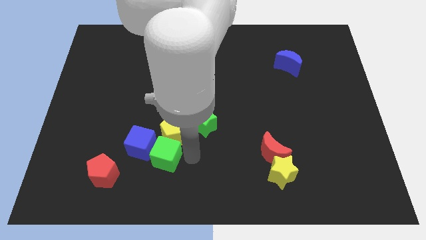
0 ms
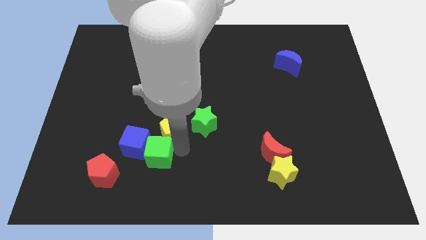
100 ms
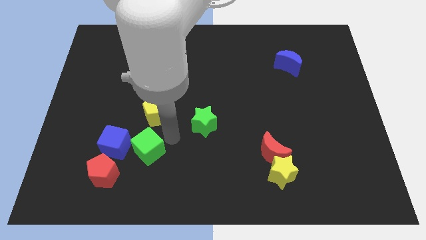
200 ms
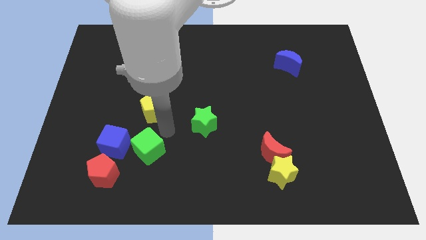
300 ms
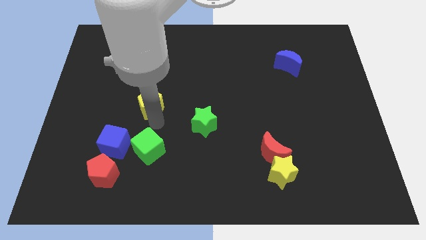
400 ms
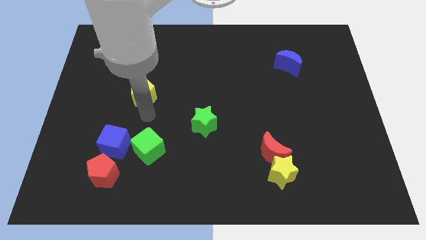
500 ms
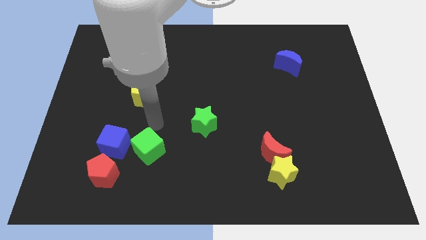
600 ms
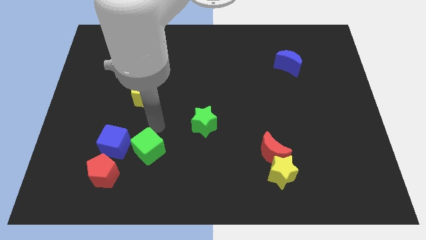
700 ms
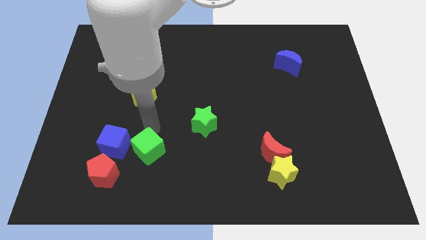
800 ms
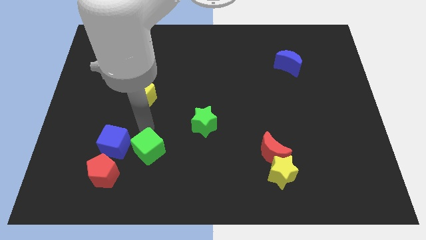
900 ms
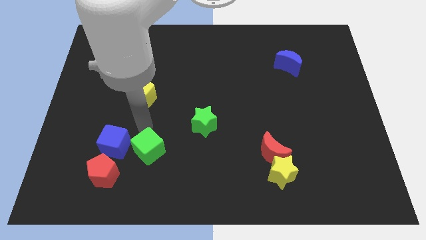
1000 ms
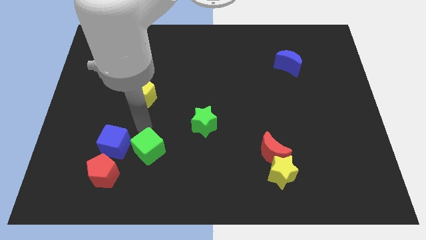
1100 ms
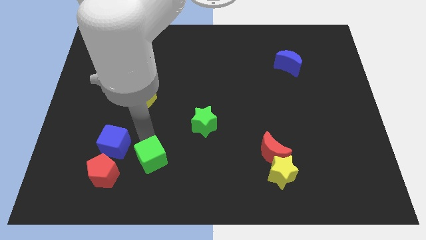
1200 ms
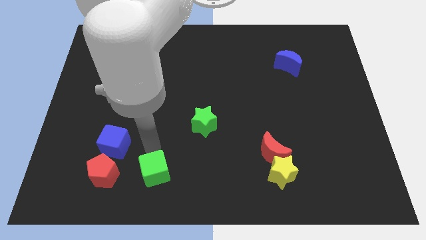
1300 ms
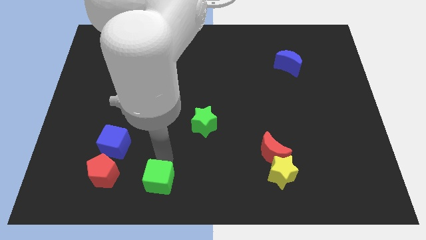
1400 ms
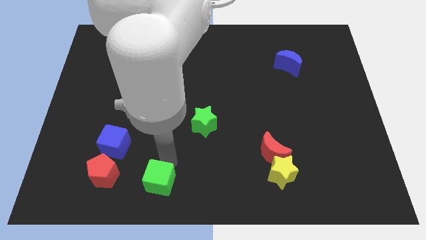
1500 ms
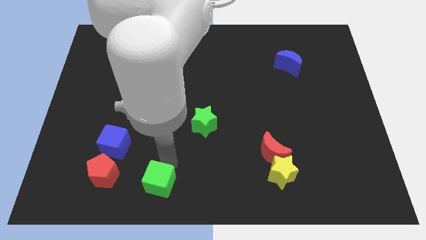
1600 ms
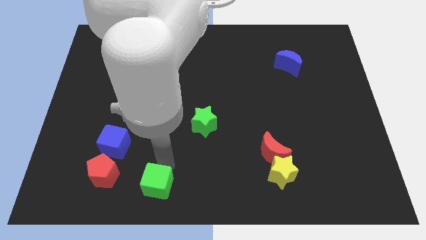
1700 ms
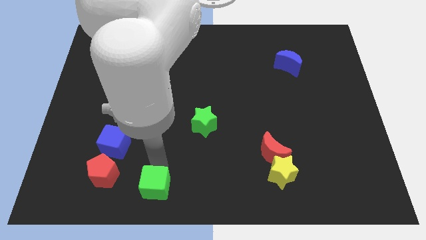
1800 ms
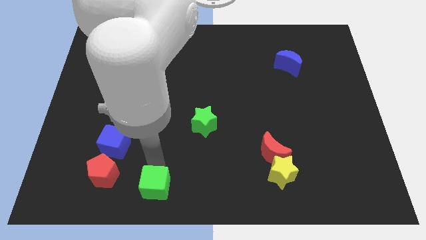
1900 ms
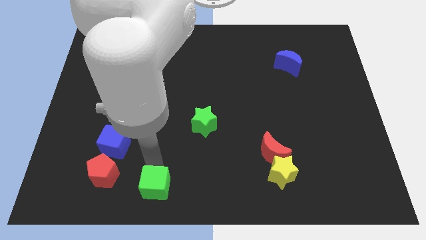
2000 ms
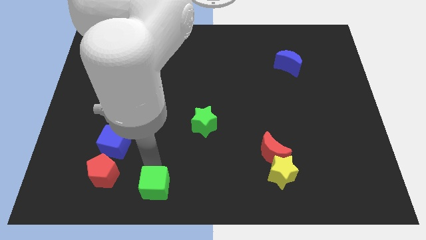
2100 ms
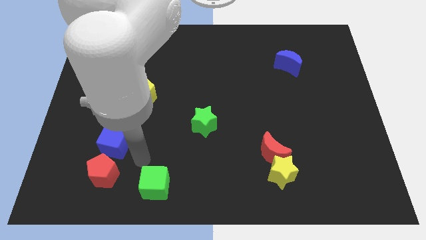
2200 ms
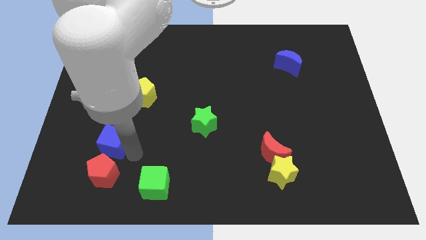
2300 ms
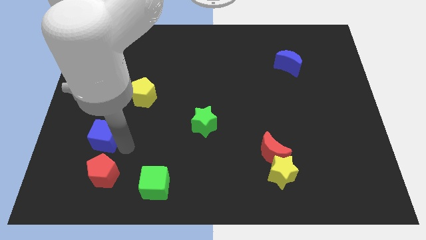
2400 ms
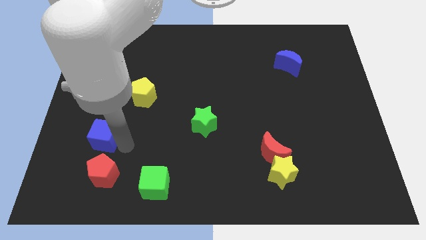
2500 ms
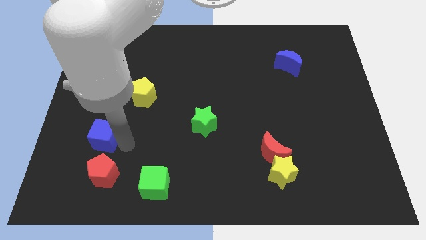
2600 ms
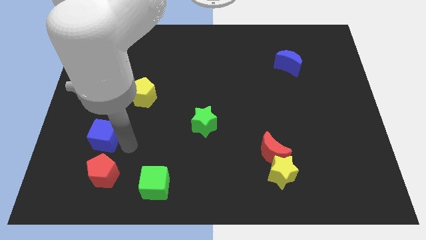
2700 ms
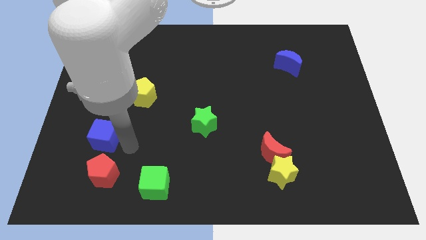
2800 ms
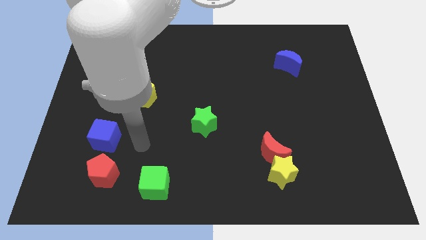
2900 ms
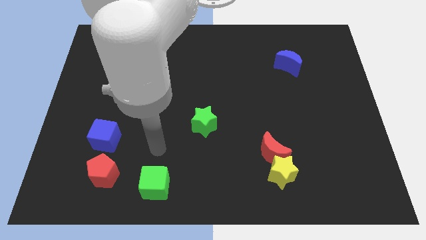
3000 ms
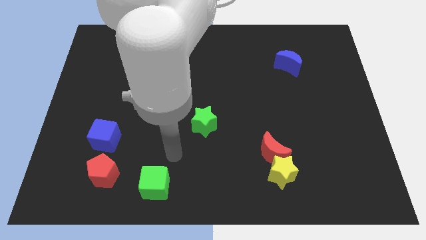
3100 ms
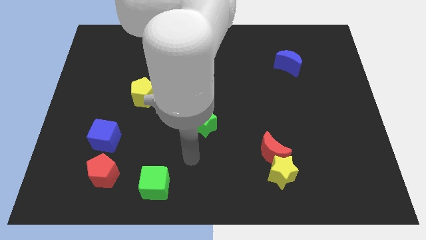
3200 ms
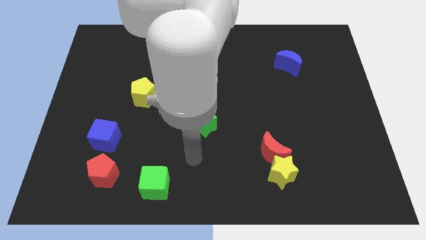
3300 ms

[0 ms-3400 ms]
slide the yellow pentagon green cube and the blue cube away from each other

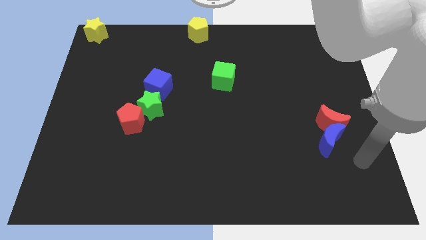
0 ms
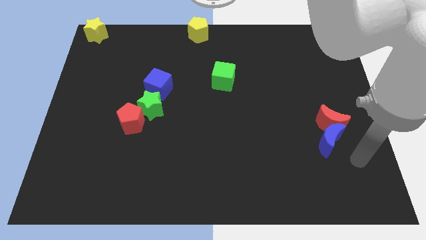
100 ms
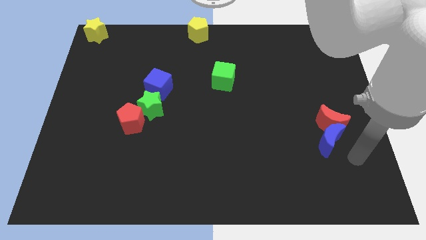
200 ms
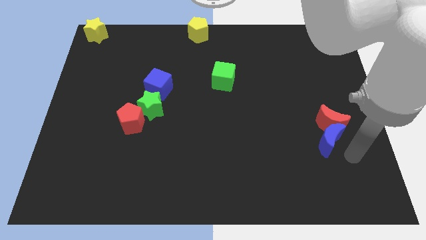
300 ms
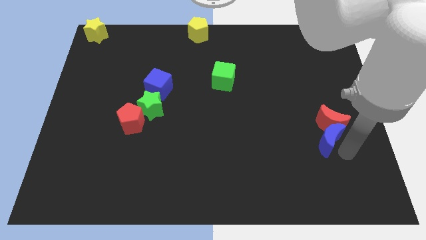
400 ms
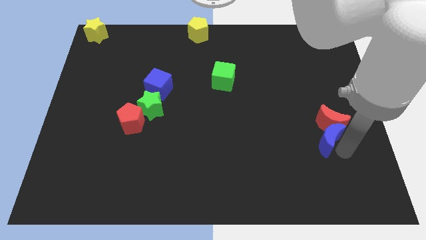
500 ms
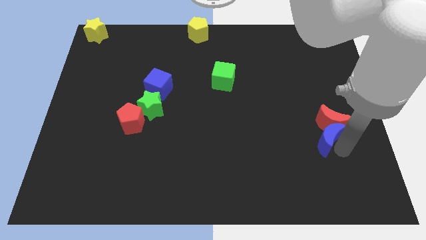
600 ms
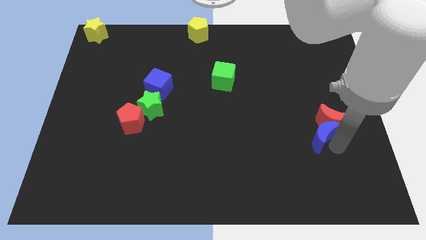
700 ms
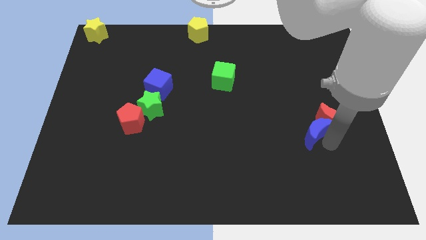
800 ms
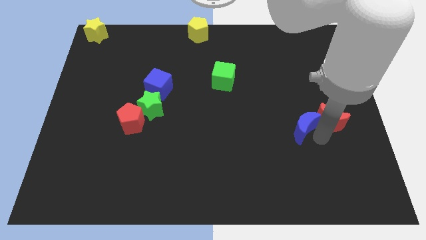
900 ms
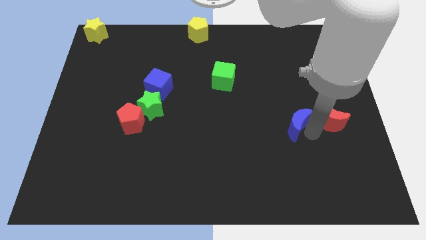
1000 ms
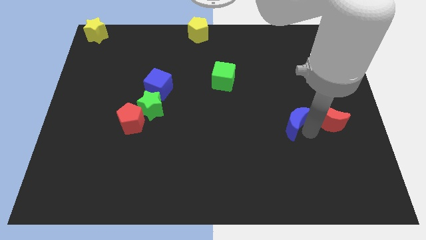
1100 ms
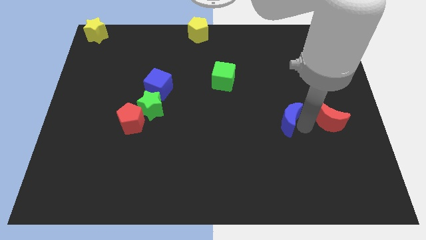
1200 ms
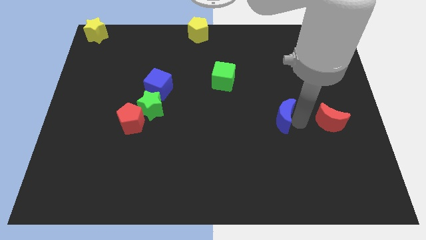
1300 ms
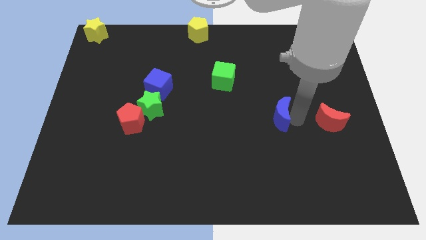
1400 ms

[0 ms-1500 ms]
seperate blue moon and red moon

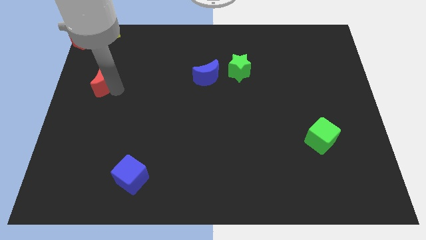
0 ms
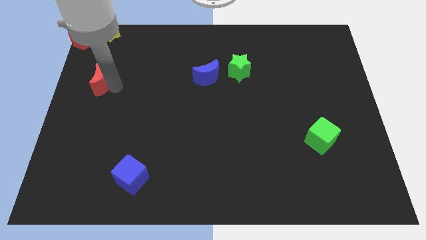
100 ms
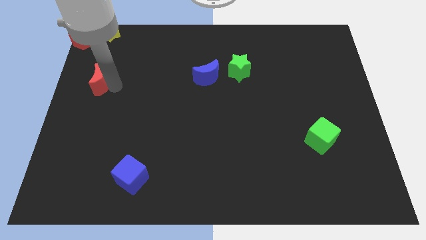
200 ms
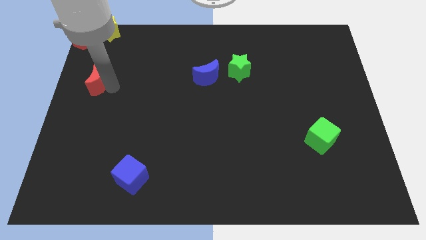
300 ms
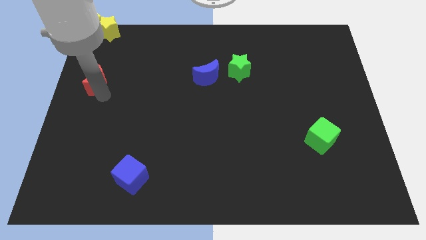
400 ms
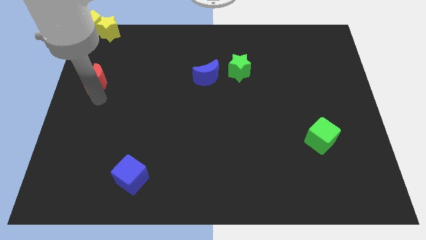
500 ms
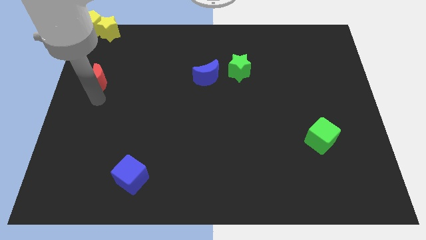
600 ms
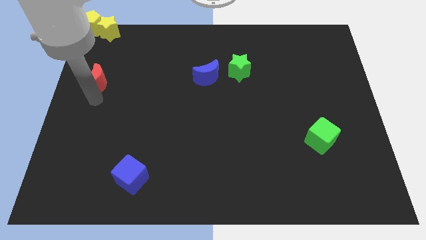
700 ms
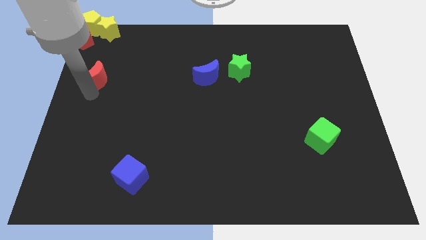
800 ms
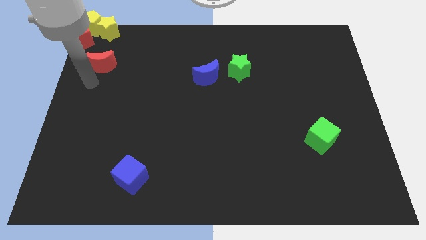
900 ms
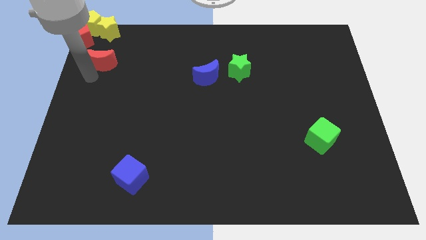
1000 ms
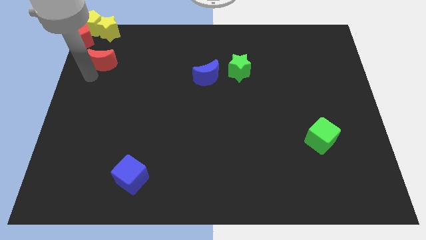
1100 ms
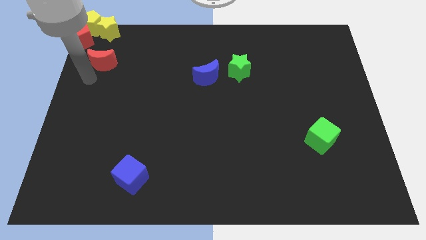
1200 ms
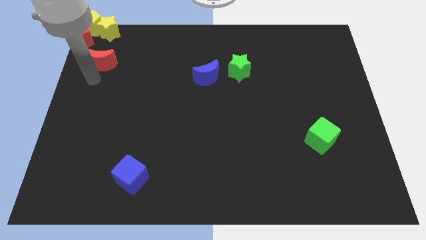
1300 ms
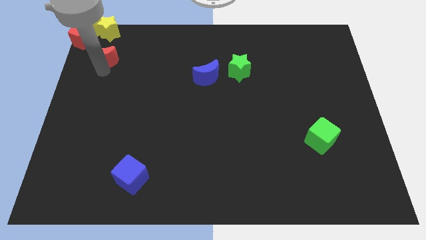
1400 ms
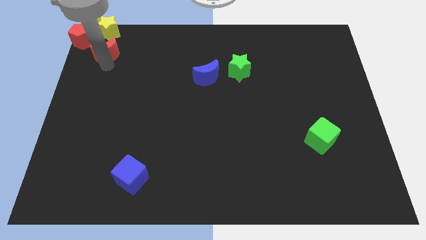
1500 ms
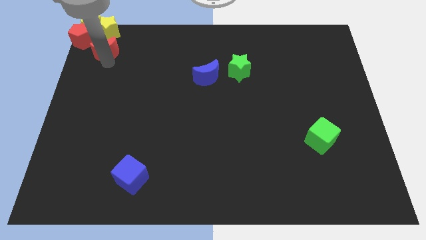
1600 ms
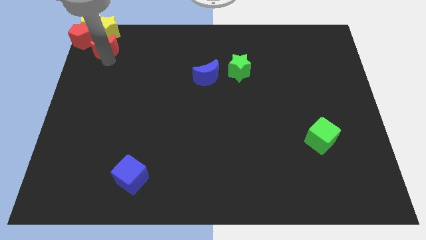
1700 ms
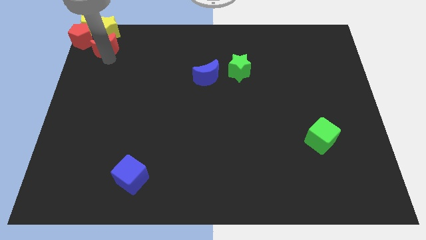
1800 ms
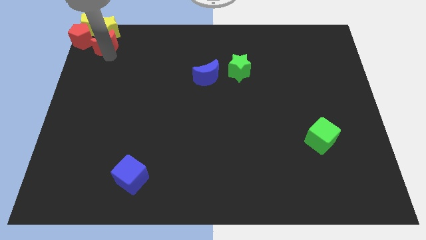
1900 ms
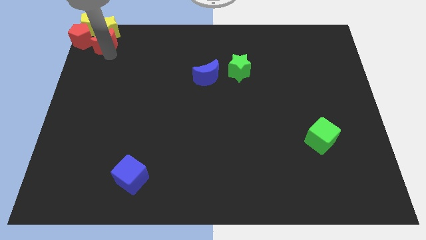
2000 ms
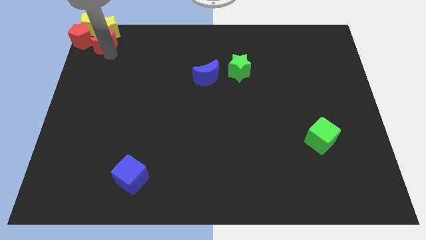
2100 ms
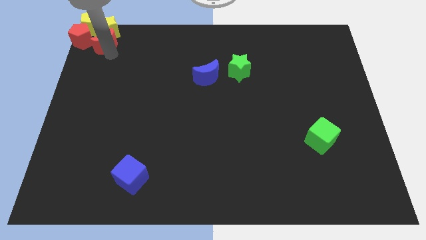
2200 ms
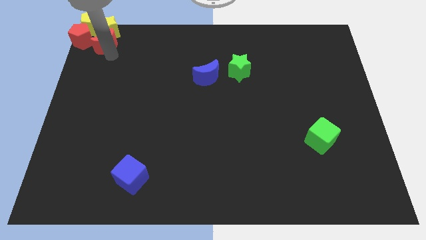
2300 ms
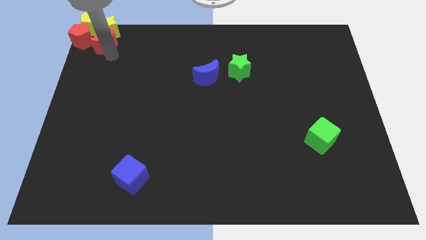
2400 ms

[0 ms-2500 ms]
place red crescent below the yellow star

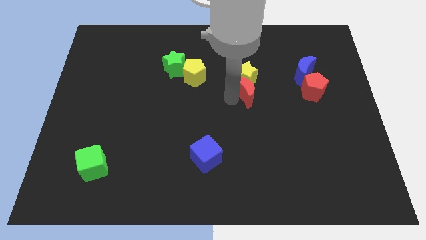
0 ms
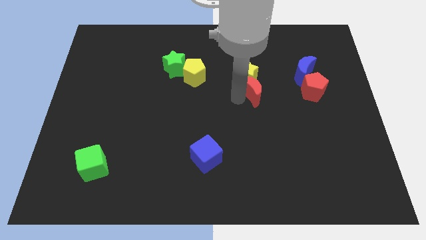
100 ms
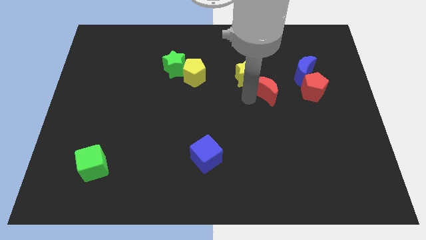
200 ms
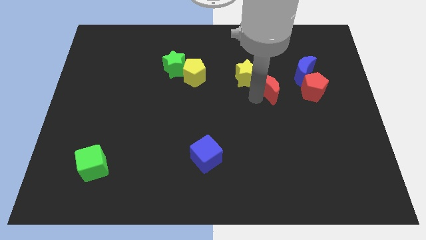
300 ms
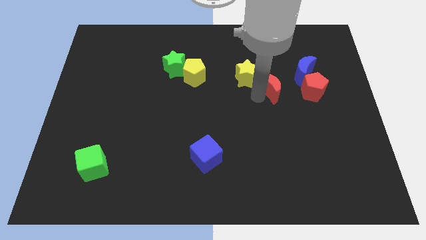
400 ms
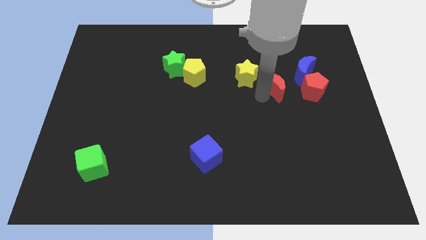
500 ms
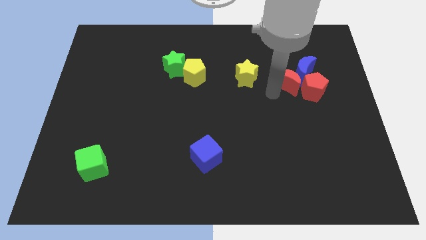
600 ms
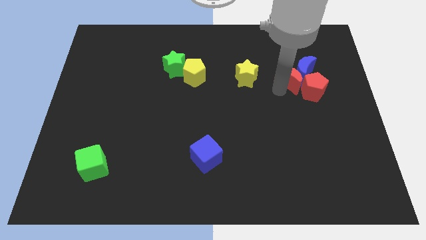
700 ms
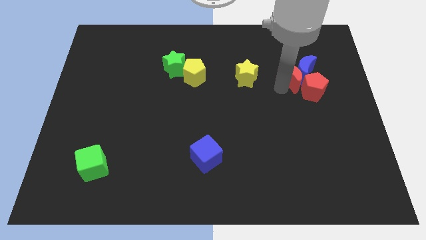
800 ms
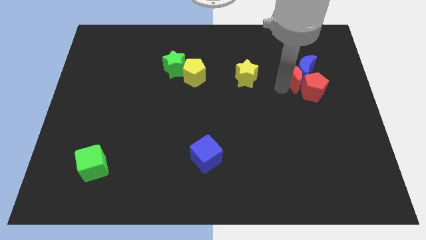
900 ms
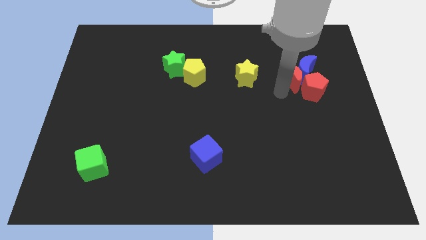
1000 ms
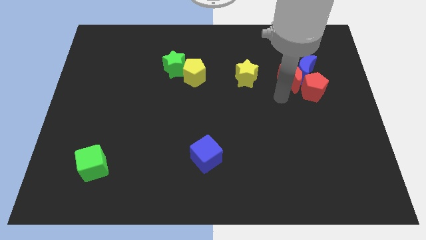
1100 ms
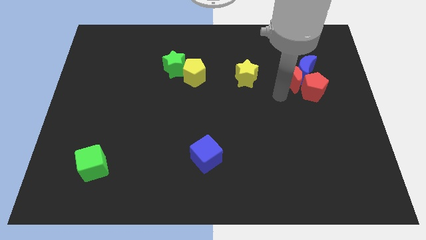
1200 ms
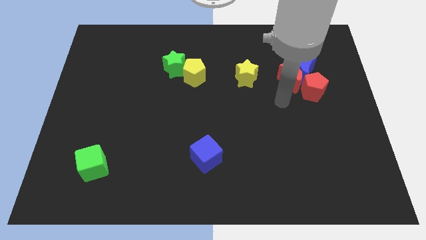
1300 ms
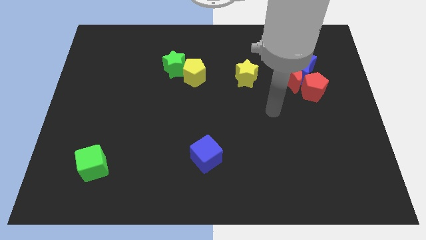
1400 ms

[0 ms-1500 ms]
push the red moon into the blue moon and red pentagon
